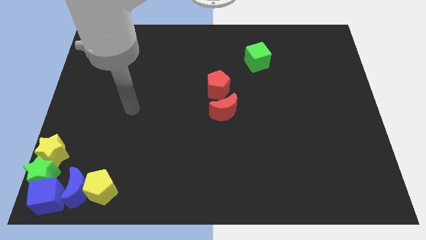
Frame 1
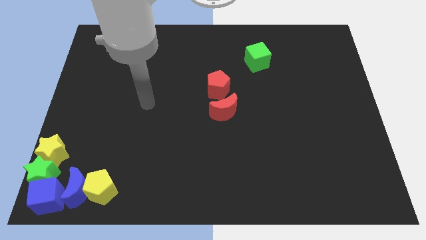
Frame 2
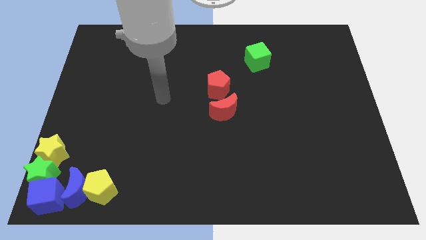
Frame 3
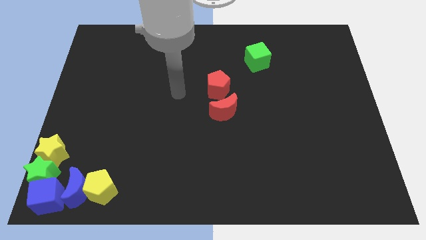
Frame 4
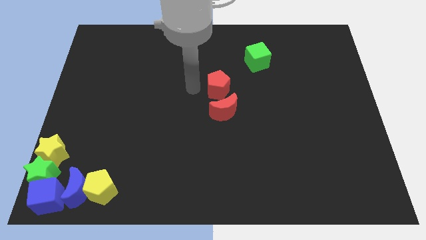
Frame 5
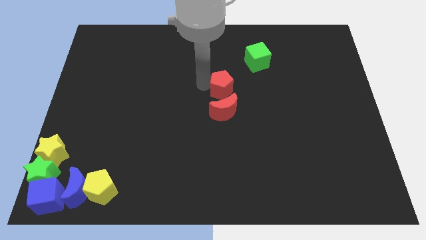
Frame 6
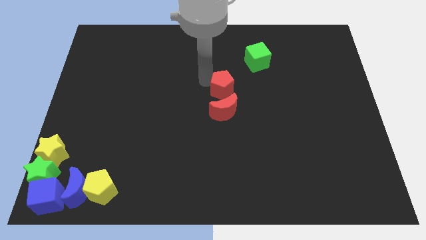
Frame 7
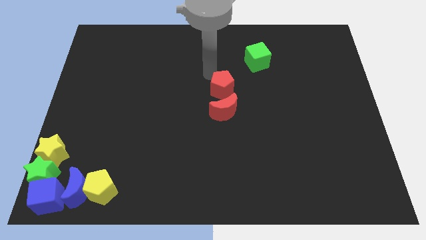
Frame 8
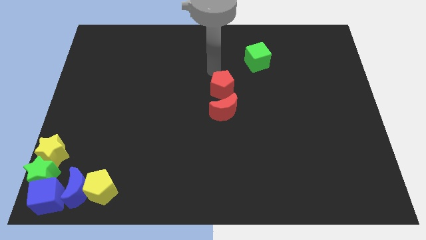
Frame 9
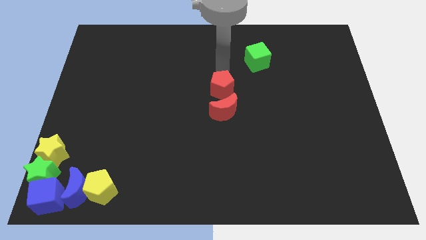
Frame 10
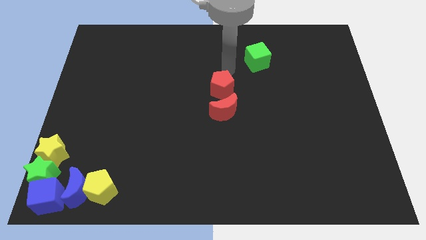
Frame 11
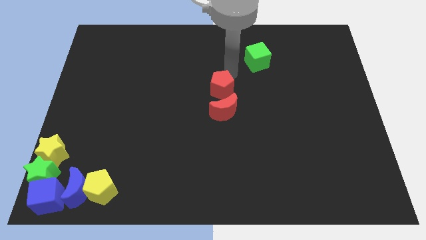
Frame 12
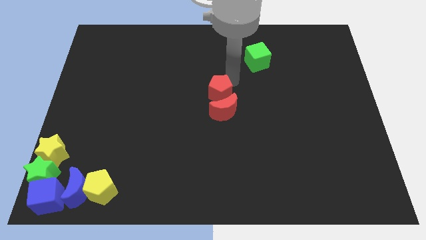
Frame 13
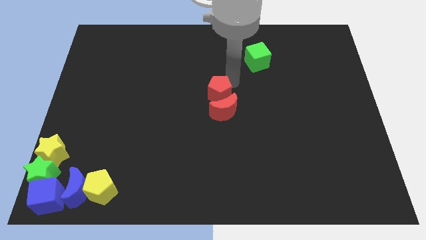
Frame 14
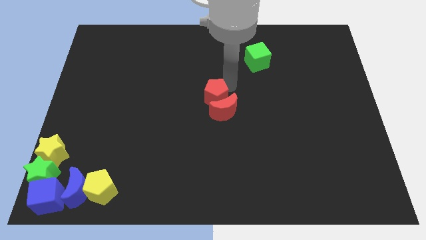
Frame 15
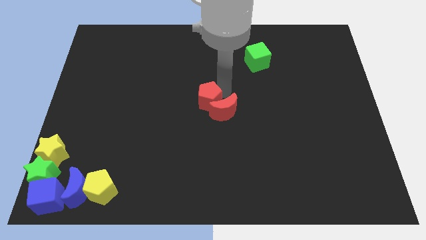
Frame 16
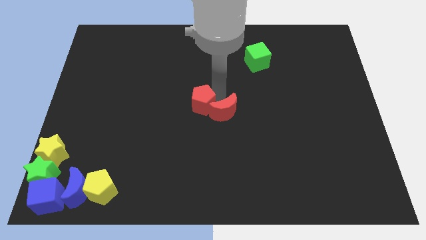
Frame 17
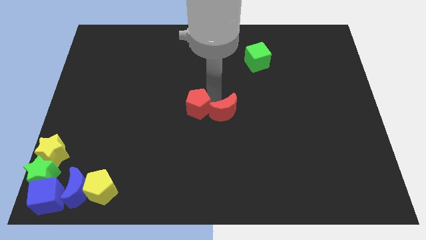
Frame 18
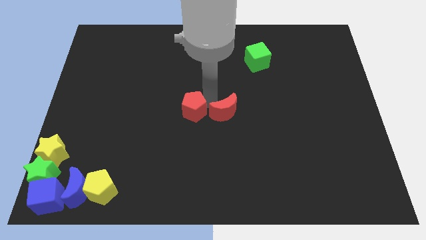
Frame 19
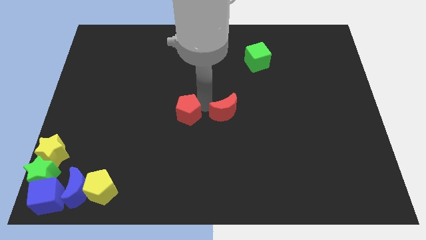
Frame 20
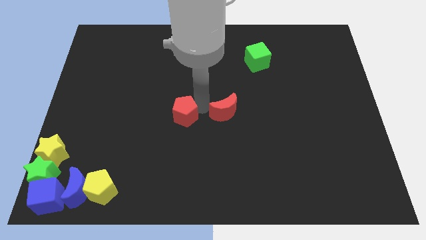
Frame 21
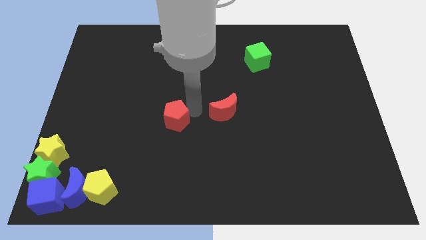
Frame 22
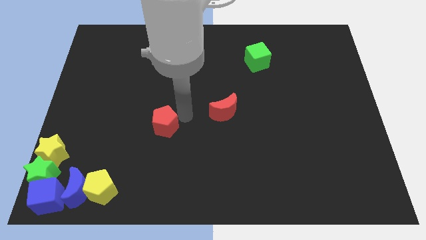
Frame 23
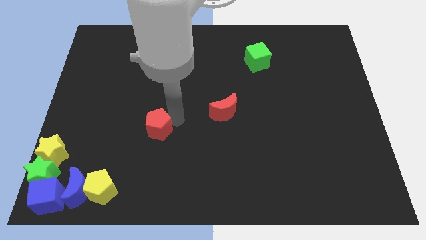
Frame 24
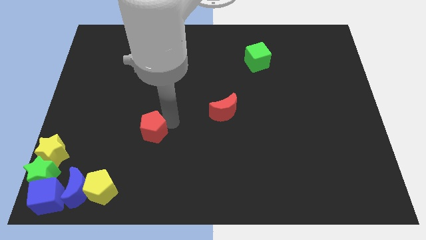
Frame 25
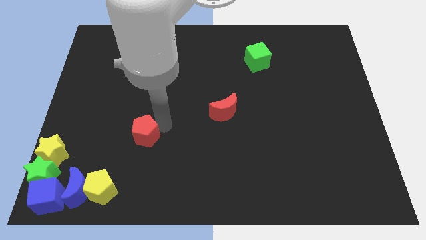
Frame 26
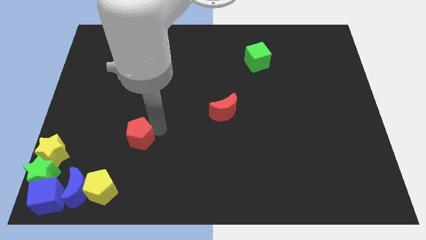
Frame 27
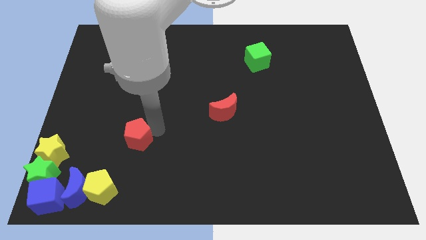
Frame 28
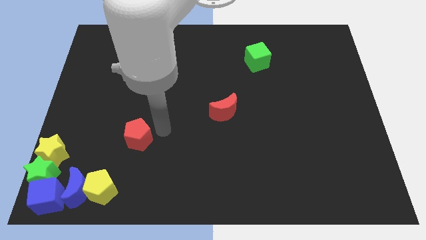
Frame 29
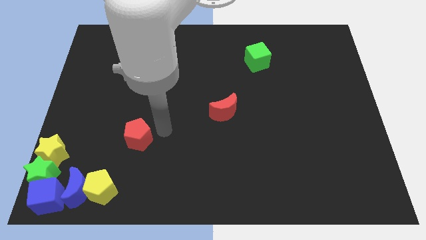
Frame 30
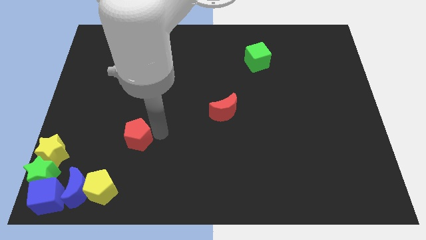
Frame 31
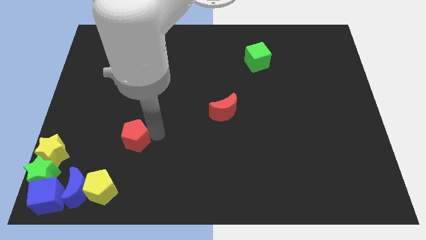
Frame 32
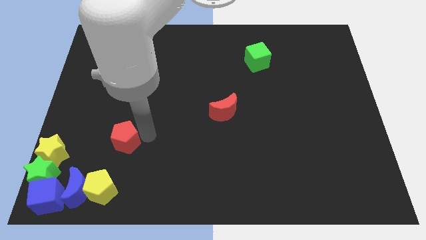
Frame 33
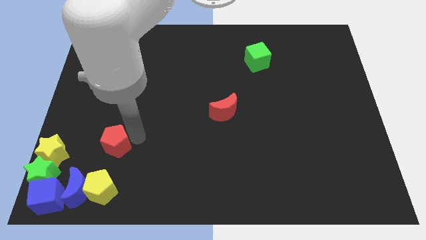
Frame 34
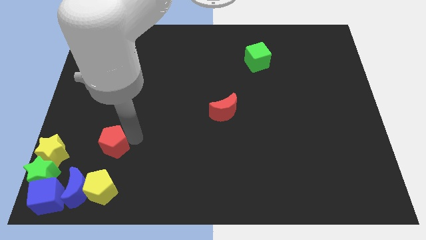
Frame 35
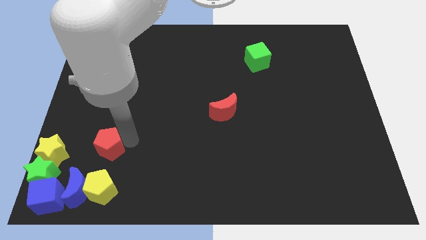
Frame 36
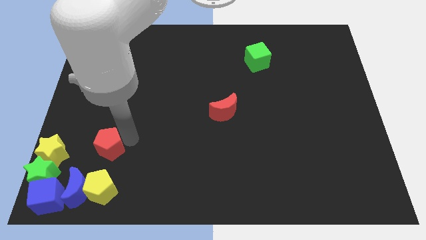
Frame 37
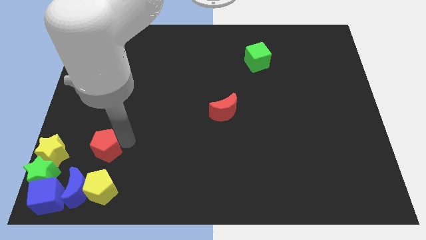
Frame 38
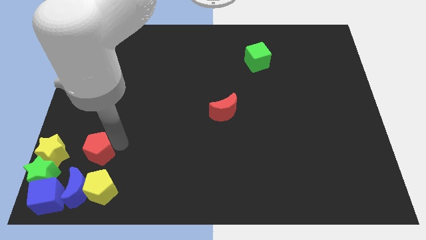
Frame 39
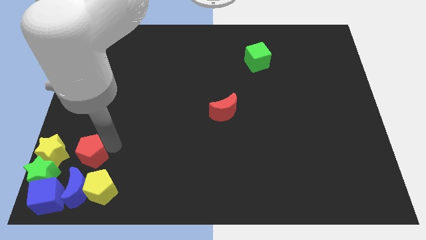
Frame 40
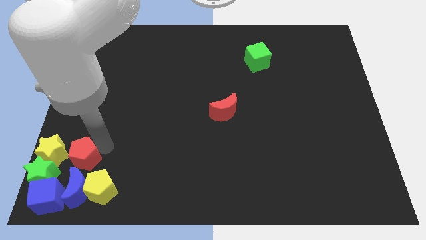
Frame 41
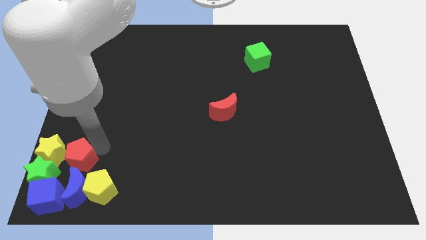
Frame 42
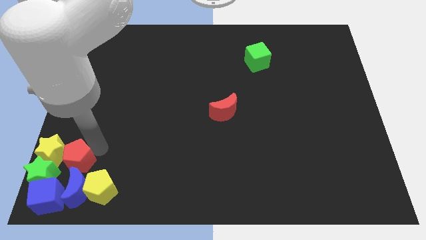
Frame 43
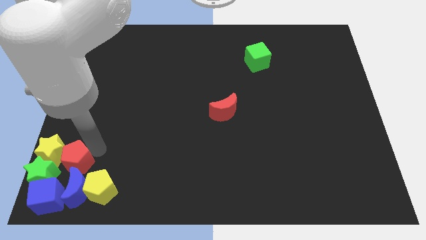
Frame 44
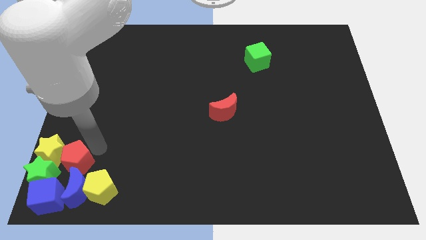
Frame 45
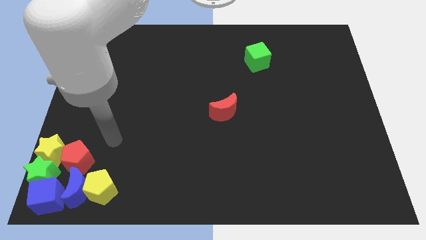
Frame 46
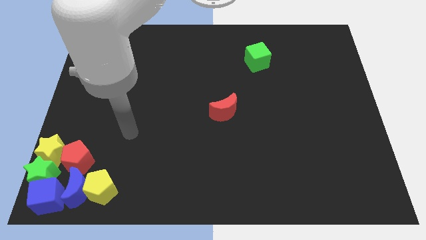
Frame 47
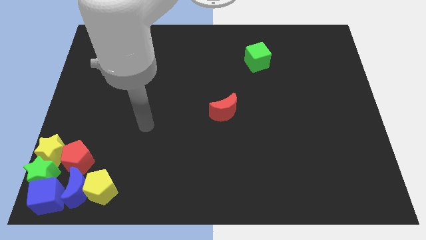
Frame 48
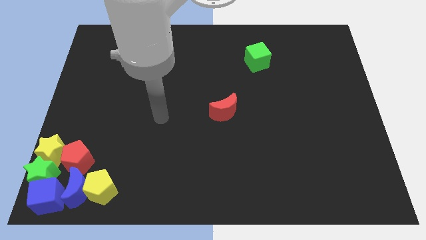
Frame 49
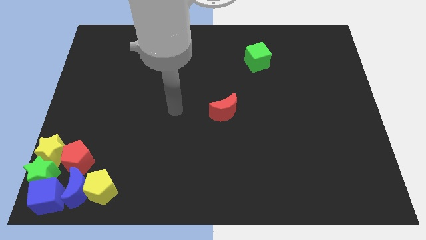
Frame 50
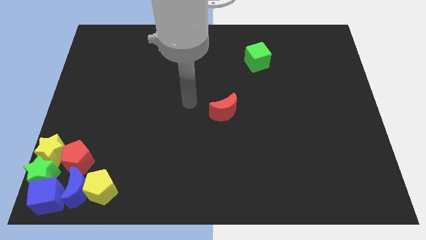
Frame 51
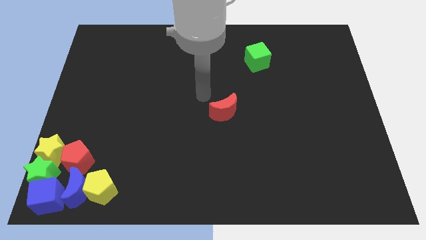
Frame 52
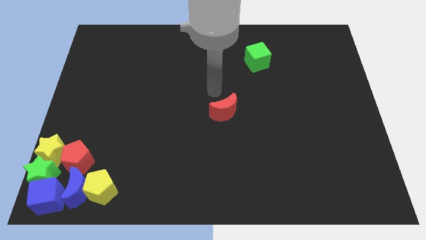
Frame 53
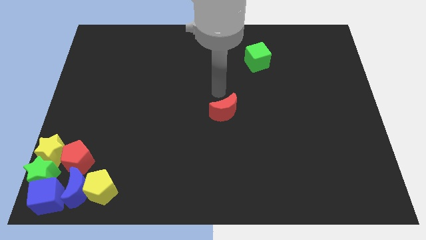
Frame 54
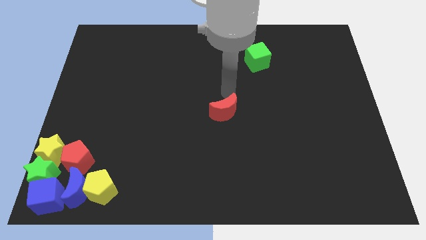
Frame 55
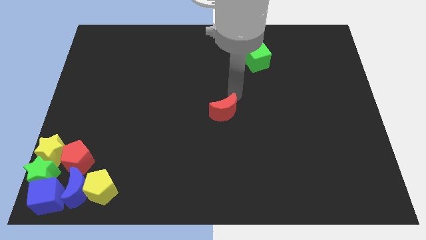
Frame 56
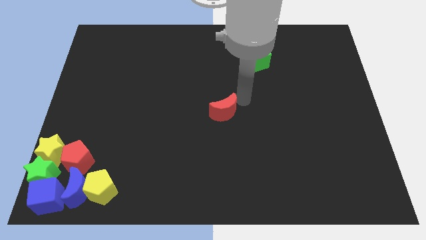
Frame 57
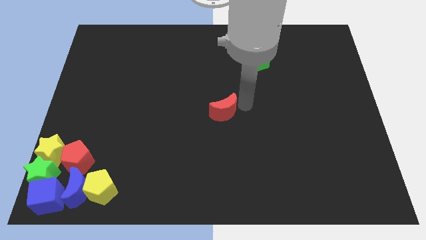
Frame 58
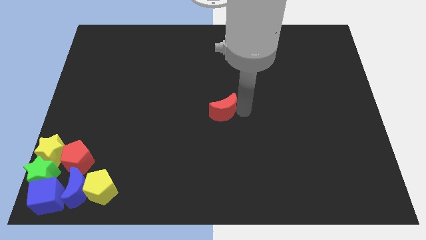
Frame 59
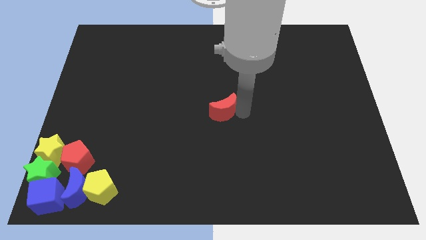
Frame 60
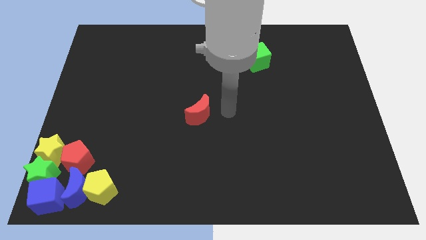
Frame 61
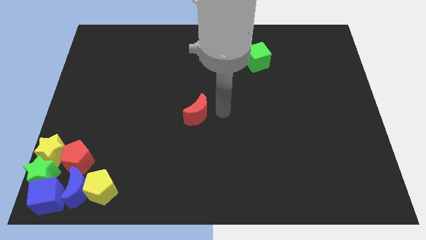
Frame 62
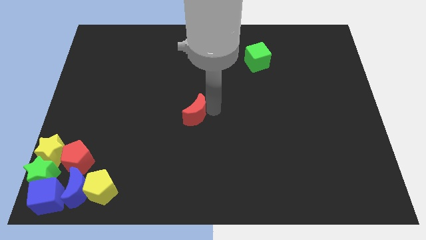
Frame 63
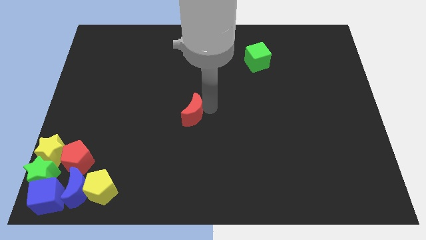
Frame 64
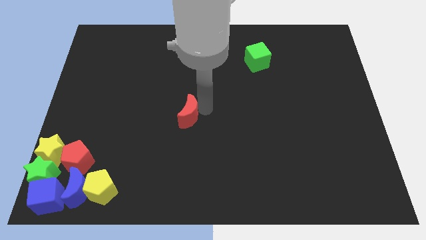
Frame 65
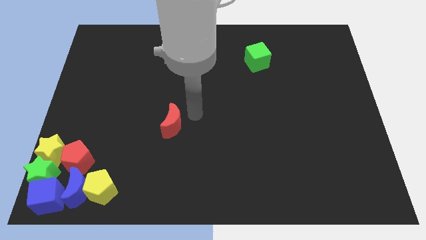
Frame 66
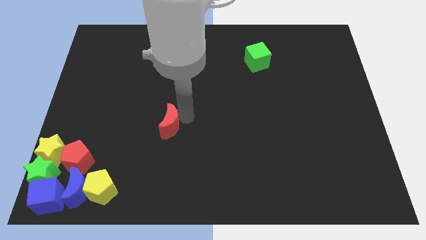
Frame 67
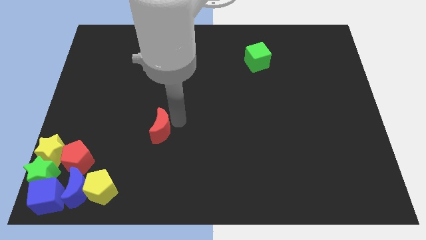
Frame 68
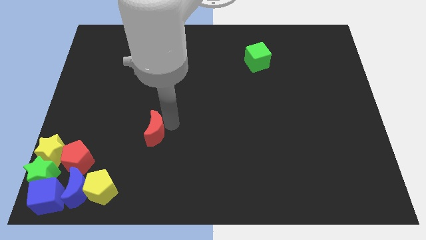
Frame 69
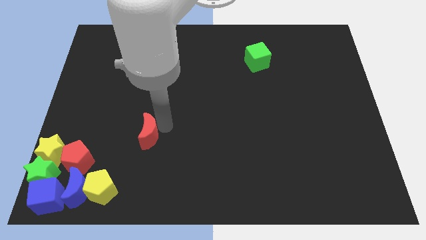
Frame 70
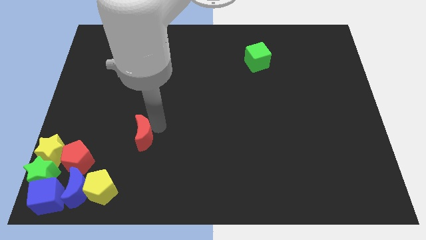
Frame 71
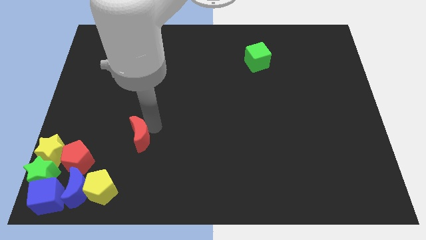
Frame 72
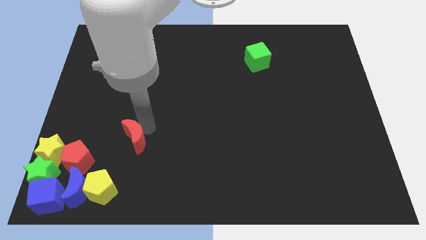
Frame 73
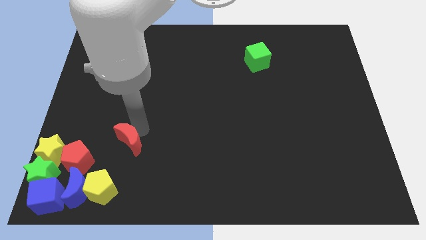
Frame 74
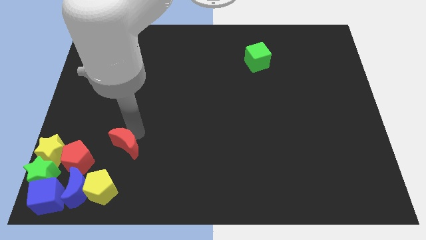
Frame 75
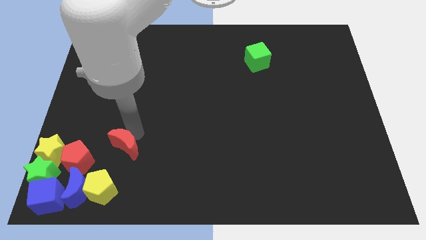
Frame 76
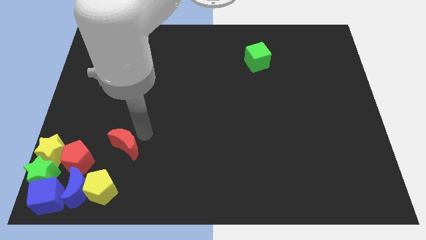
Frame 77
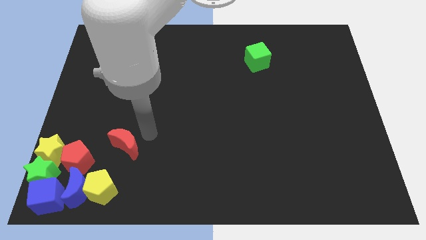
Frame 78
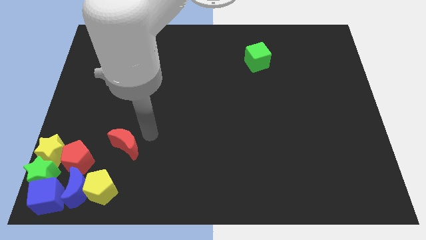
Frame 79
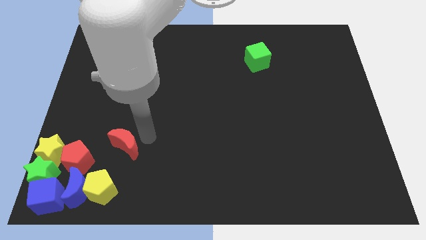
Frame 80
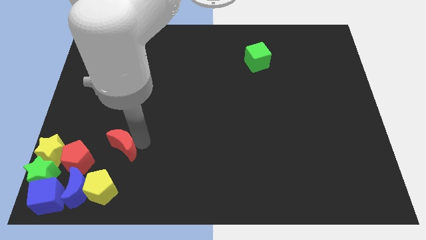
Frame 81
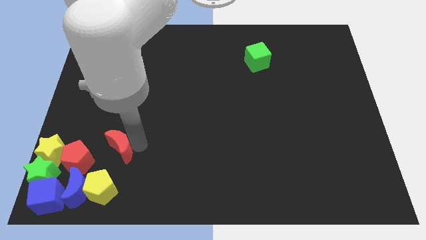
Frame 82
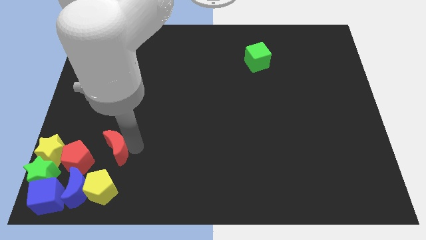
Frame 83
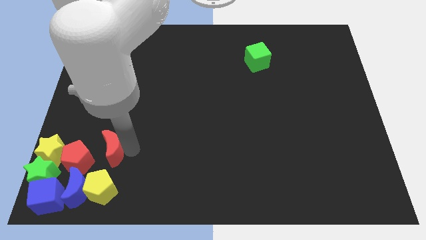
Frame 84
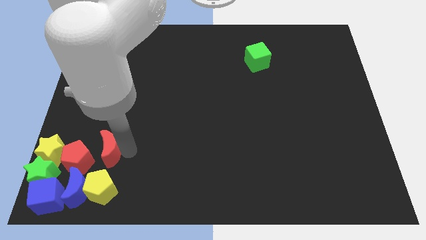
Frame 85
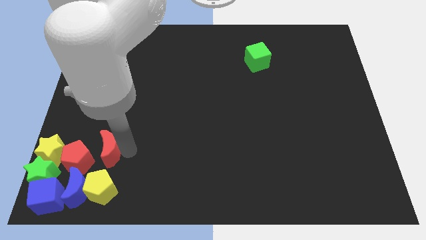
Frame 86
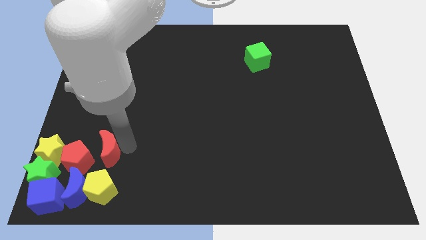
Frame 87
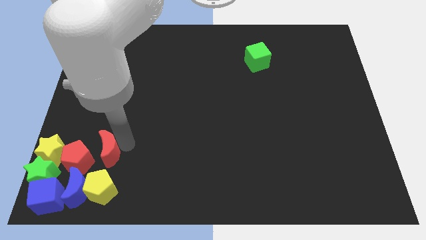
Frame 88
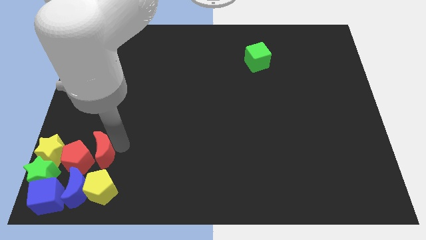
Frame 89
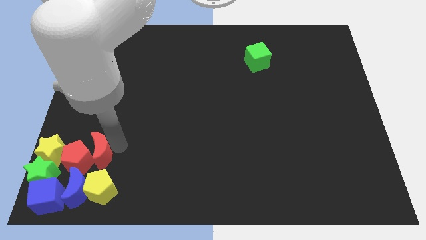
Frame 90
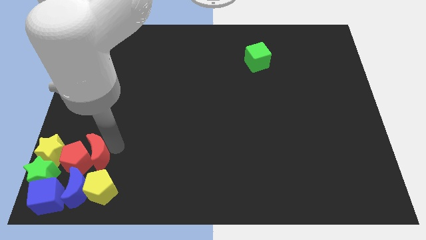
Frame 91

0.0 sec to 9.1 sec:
group up all the blocks at the bottom left of the board except the green cube
